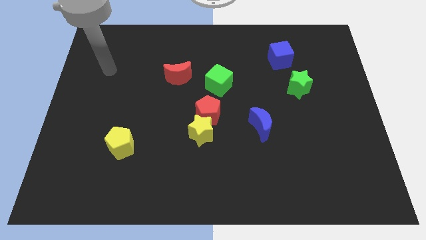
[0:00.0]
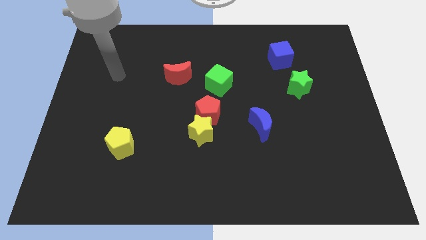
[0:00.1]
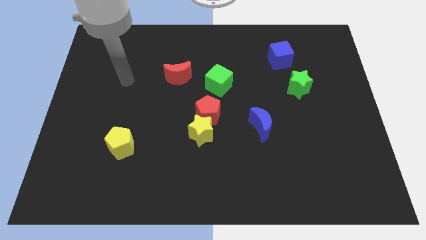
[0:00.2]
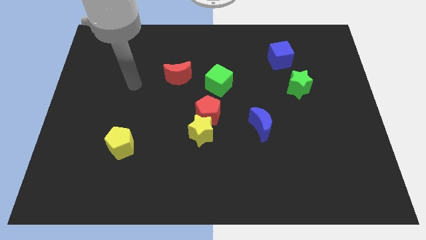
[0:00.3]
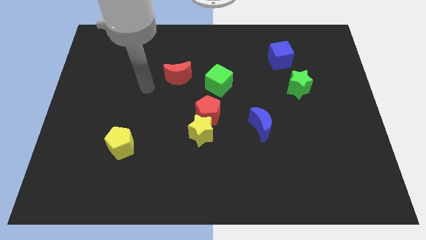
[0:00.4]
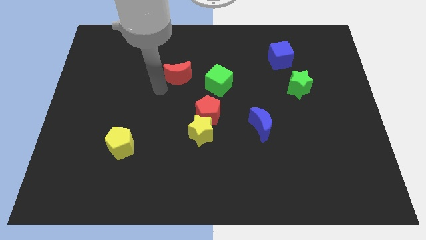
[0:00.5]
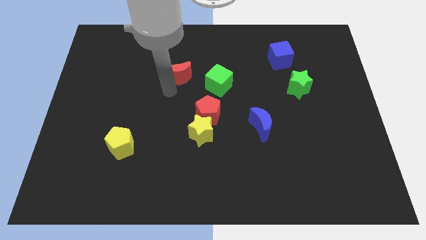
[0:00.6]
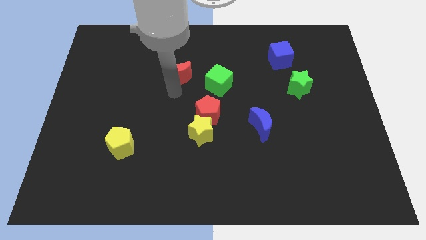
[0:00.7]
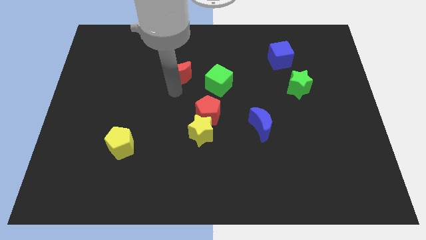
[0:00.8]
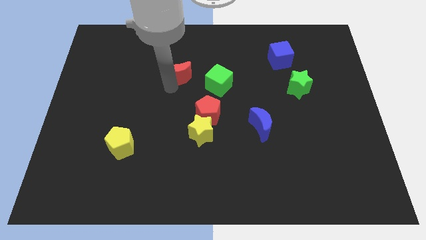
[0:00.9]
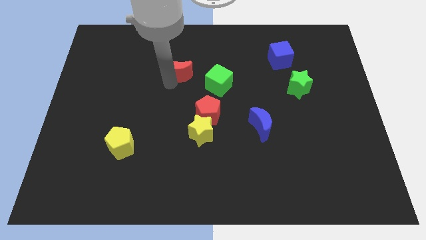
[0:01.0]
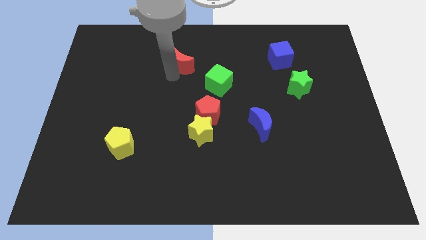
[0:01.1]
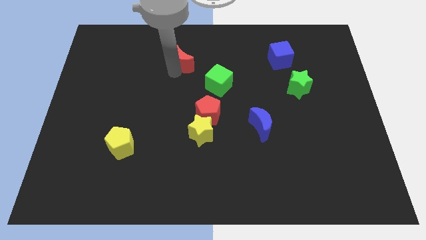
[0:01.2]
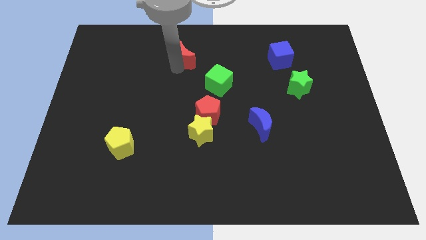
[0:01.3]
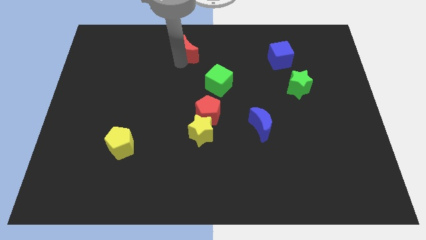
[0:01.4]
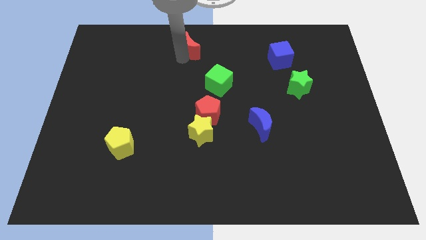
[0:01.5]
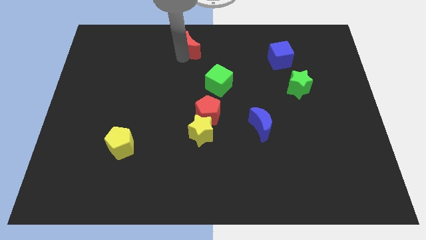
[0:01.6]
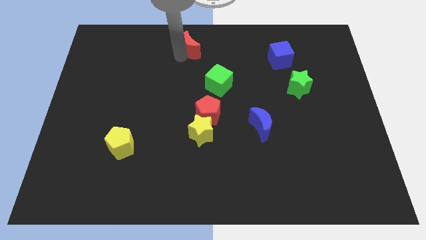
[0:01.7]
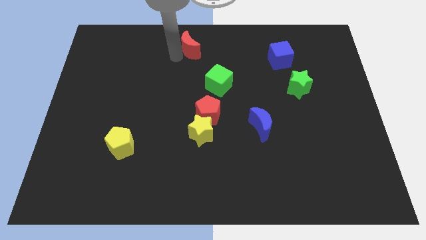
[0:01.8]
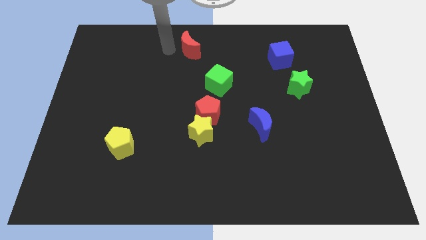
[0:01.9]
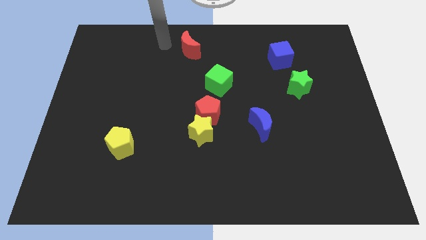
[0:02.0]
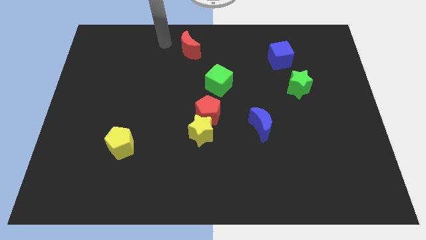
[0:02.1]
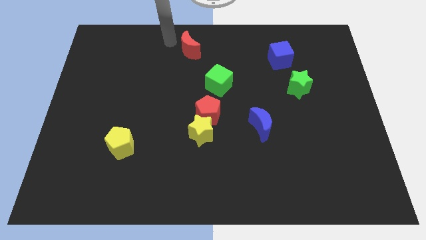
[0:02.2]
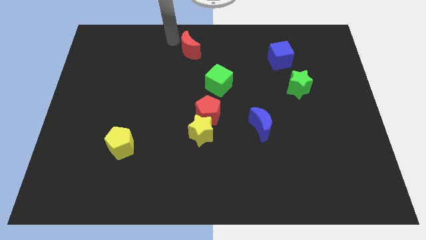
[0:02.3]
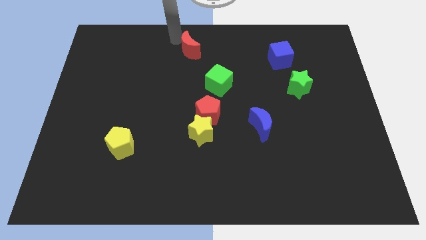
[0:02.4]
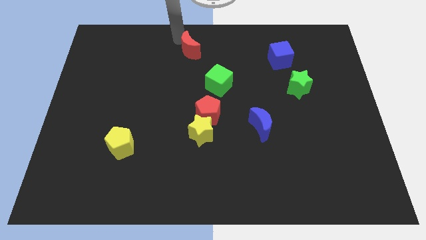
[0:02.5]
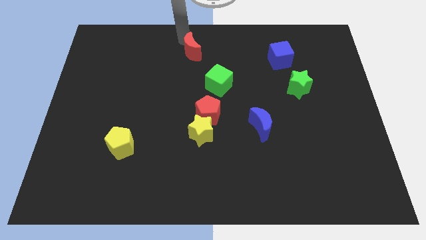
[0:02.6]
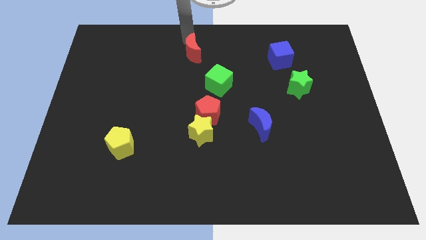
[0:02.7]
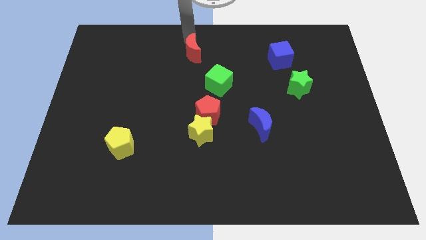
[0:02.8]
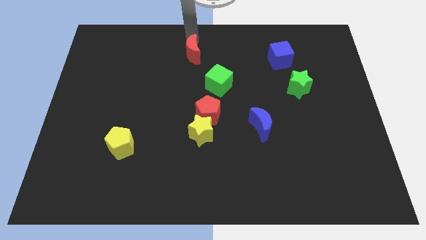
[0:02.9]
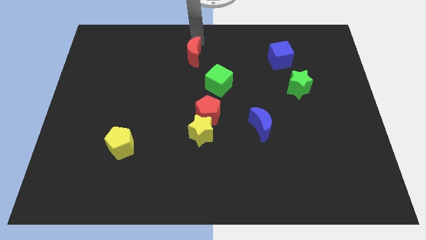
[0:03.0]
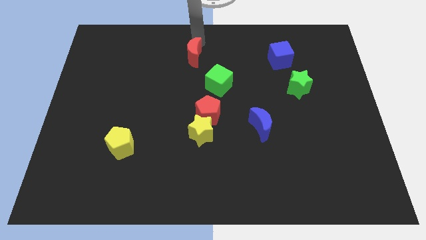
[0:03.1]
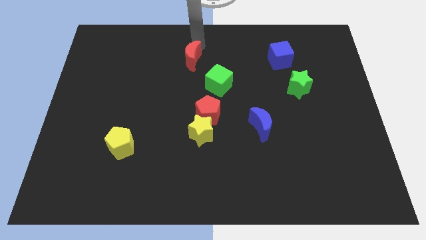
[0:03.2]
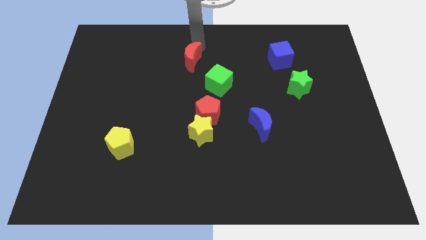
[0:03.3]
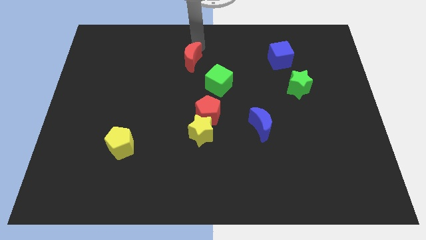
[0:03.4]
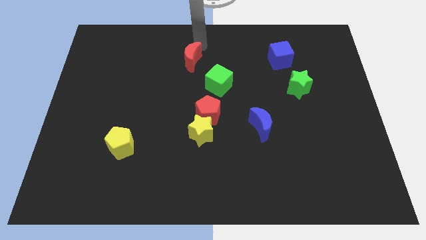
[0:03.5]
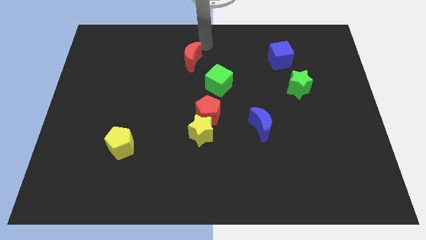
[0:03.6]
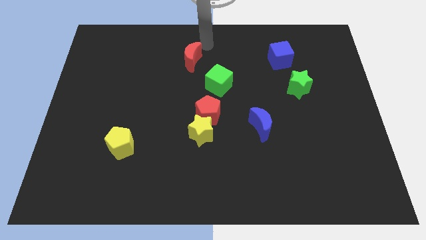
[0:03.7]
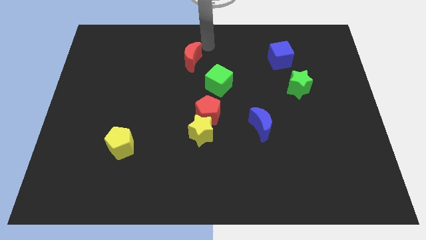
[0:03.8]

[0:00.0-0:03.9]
push the red crescent towards the top

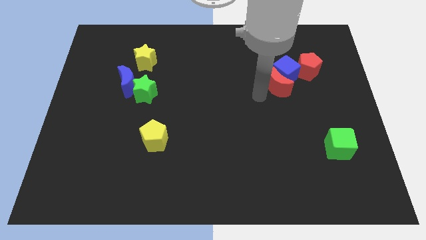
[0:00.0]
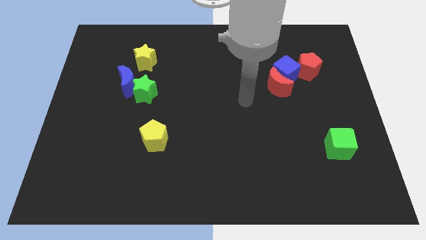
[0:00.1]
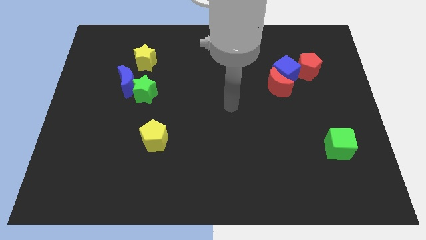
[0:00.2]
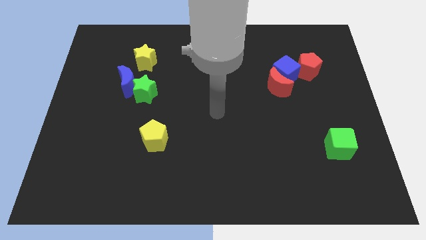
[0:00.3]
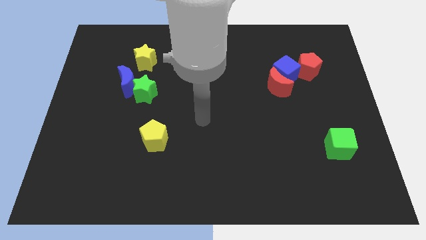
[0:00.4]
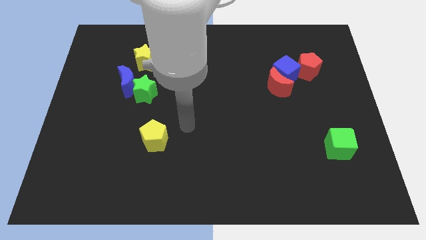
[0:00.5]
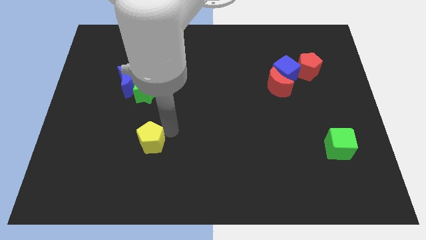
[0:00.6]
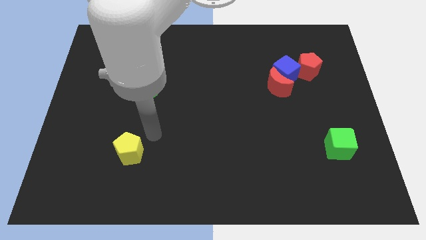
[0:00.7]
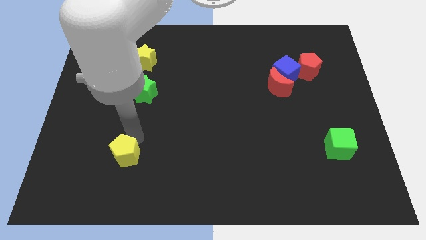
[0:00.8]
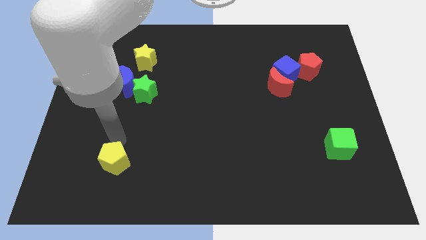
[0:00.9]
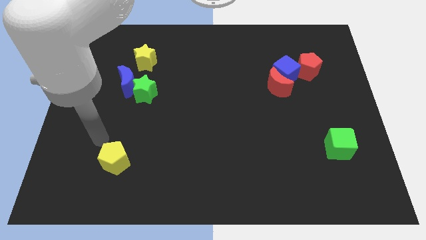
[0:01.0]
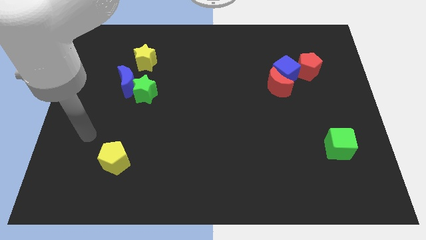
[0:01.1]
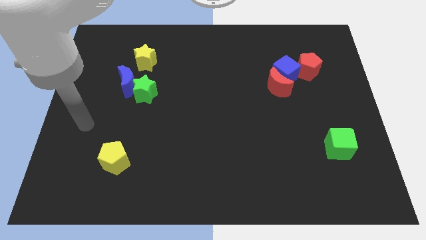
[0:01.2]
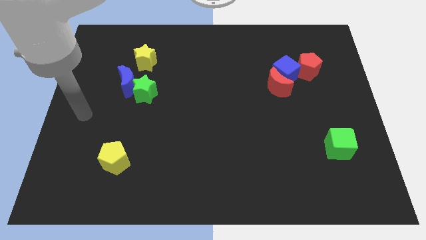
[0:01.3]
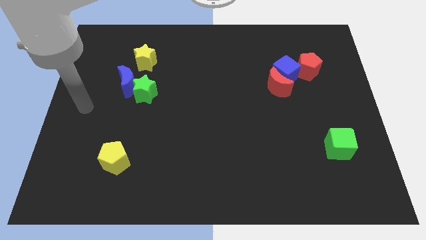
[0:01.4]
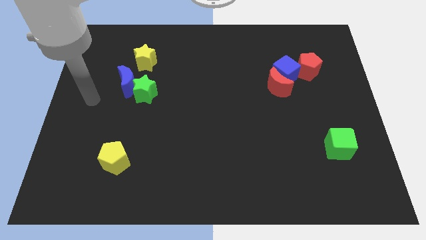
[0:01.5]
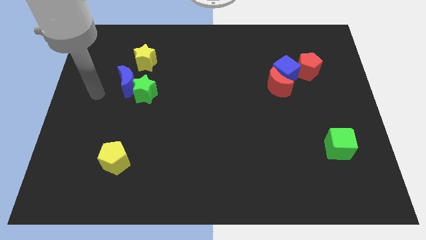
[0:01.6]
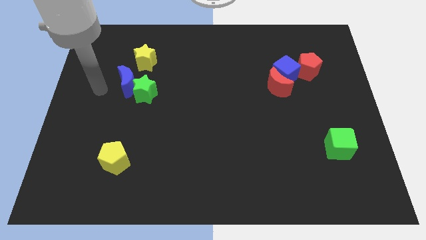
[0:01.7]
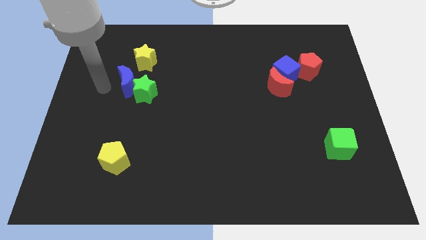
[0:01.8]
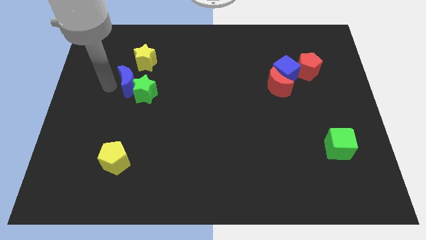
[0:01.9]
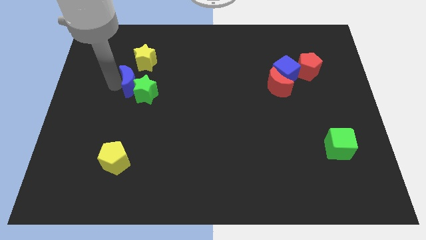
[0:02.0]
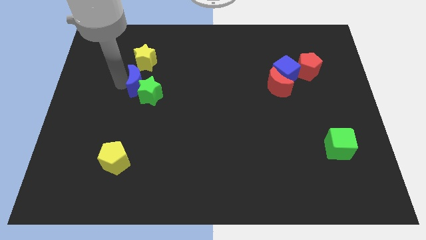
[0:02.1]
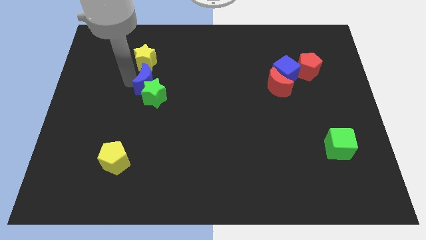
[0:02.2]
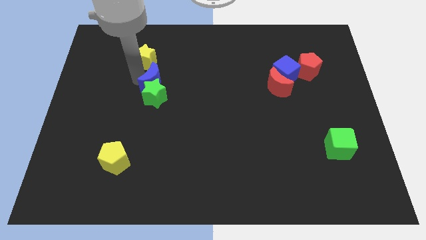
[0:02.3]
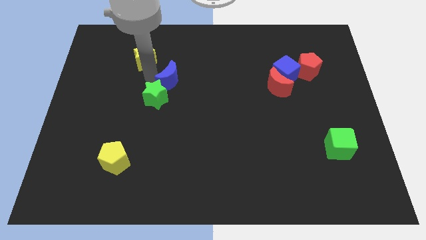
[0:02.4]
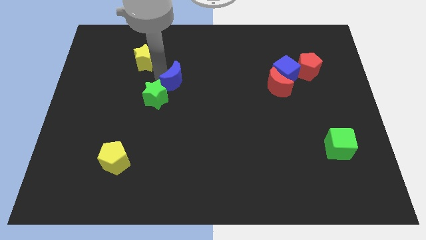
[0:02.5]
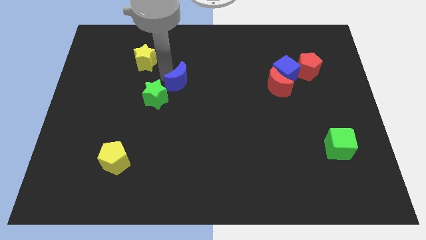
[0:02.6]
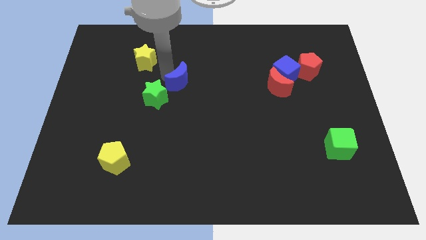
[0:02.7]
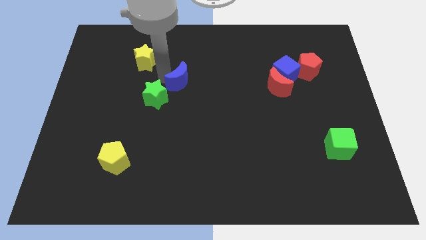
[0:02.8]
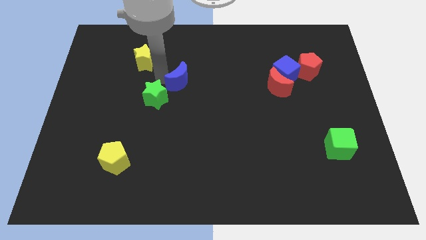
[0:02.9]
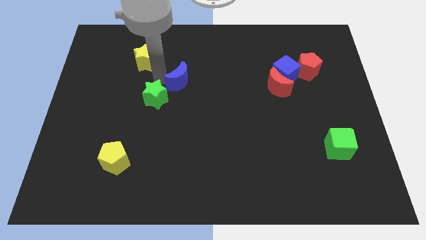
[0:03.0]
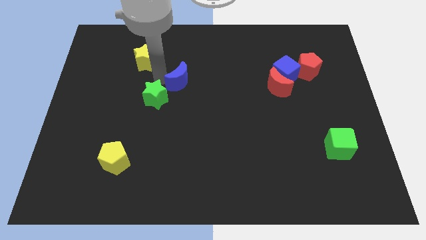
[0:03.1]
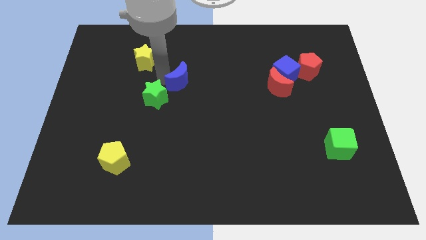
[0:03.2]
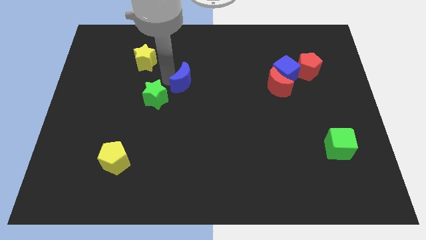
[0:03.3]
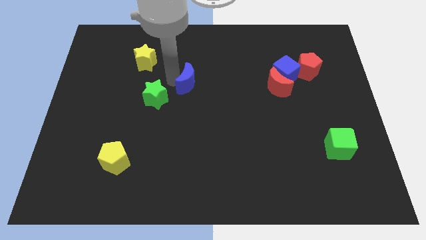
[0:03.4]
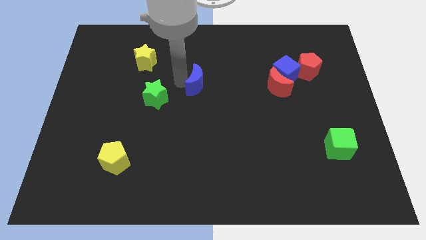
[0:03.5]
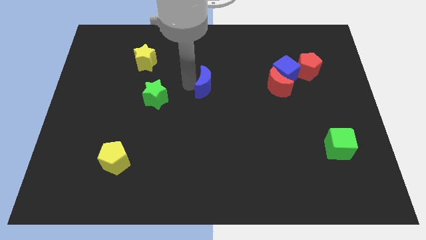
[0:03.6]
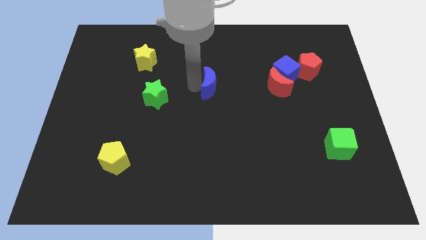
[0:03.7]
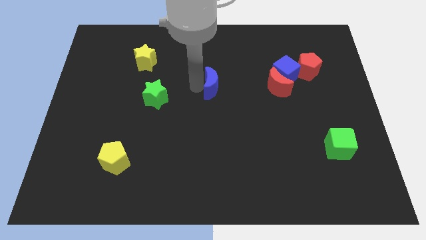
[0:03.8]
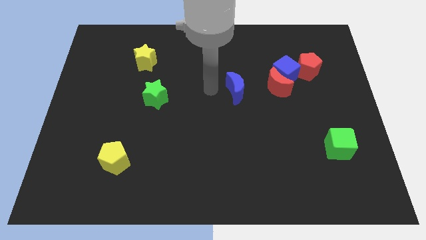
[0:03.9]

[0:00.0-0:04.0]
push the blue crescent towards the red crescent

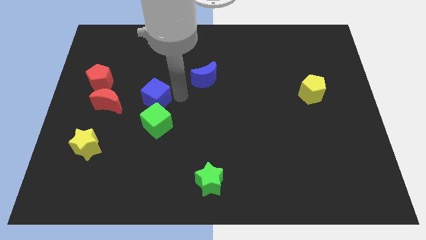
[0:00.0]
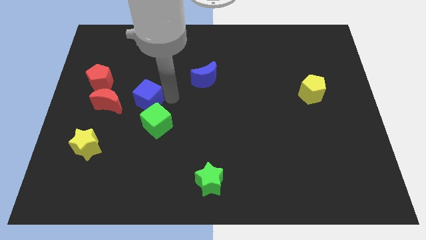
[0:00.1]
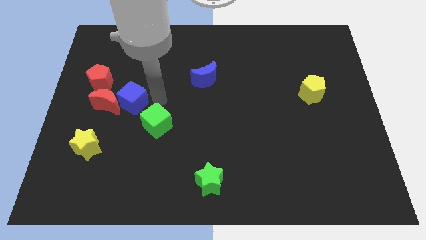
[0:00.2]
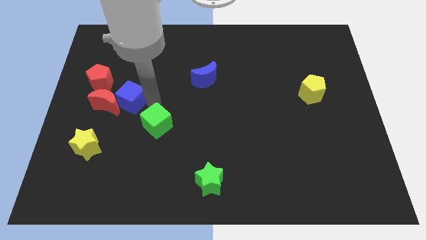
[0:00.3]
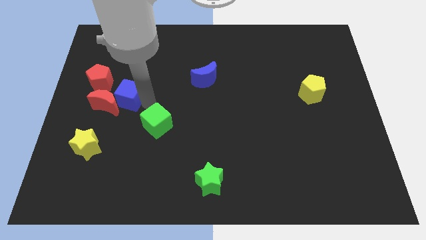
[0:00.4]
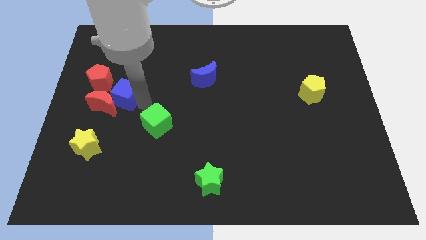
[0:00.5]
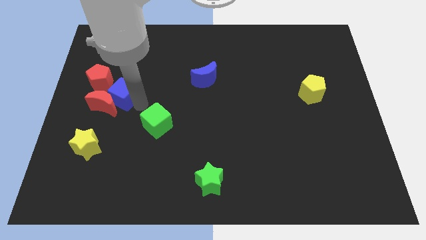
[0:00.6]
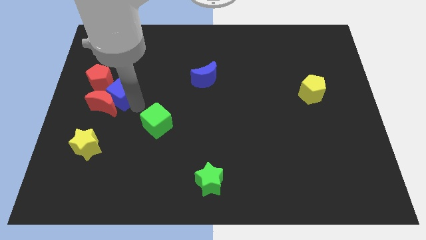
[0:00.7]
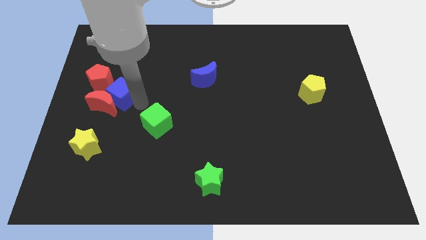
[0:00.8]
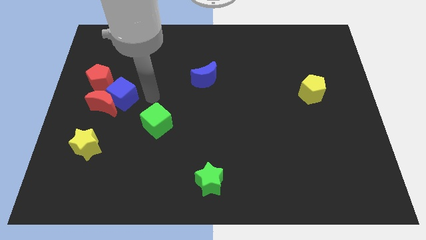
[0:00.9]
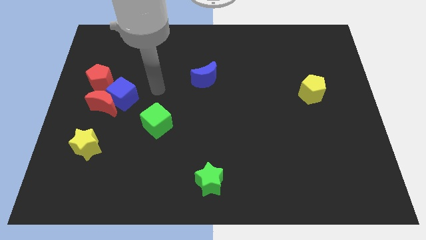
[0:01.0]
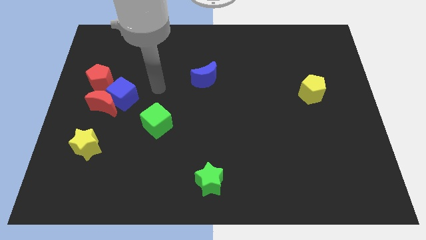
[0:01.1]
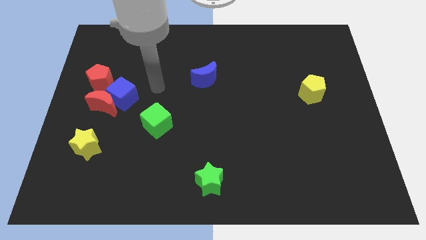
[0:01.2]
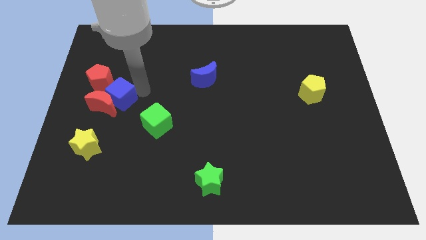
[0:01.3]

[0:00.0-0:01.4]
move blue cube right above the red moon
